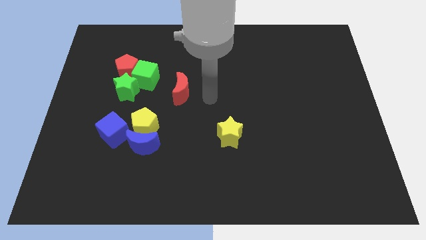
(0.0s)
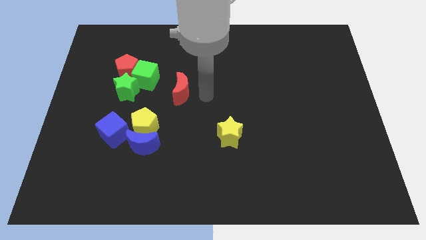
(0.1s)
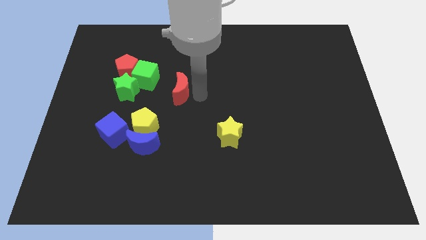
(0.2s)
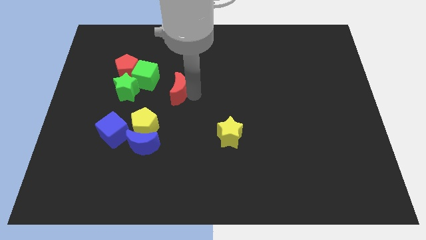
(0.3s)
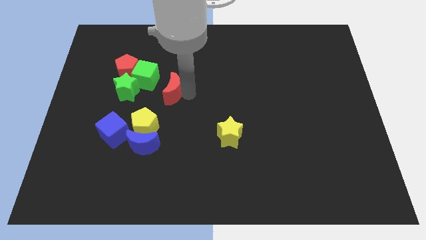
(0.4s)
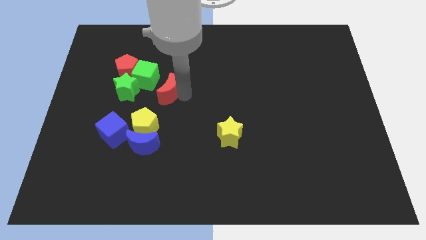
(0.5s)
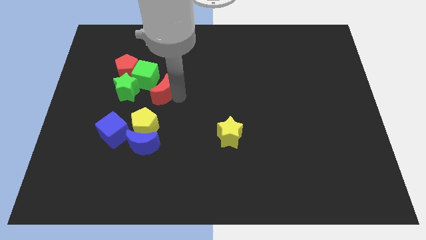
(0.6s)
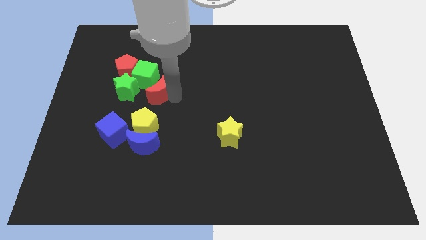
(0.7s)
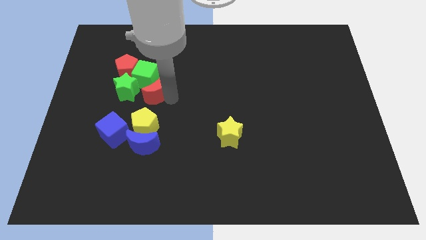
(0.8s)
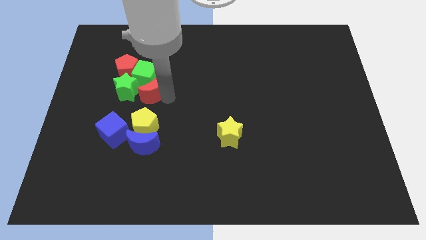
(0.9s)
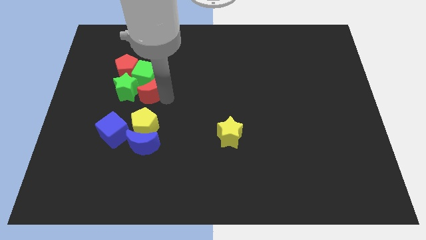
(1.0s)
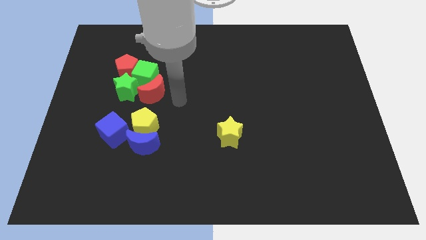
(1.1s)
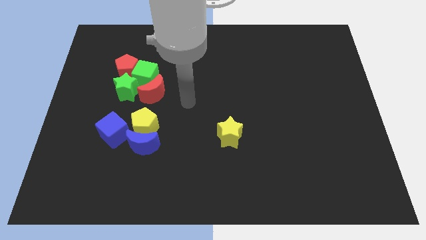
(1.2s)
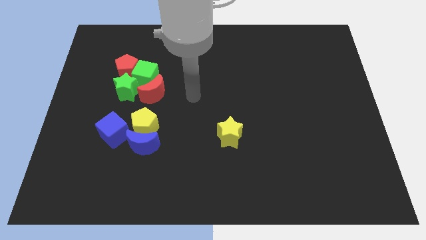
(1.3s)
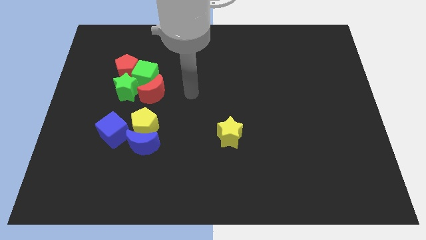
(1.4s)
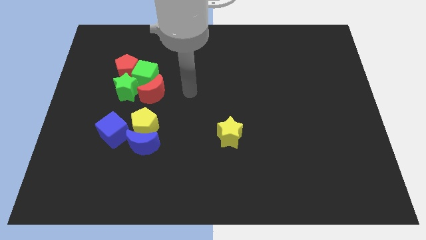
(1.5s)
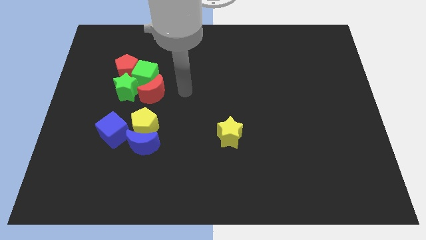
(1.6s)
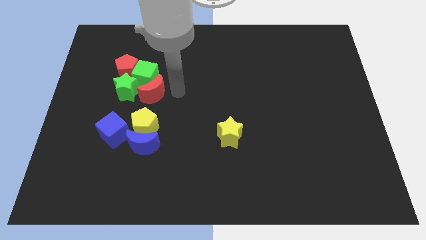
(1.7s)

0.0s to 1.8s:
place the red crescent below the green cube

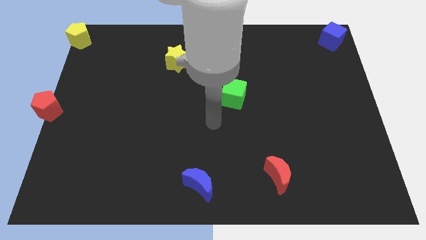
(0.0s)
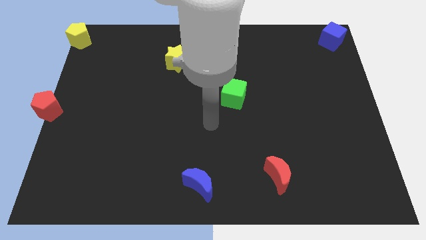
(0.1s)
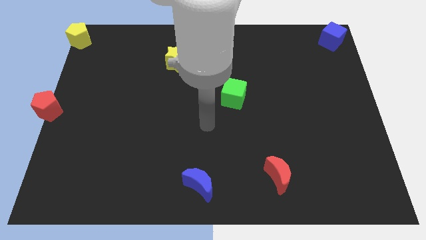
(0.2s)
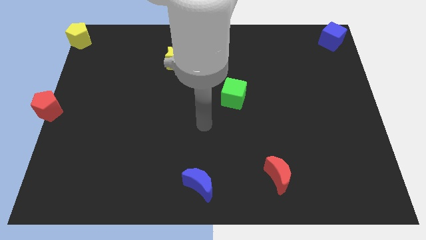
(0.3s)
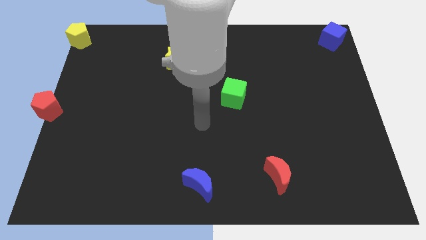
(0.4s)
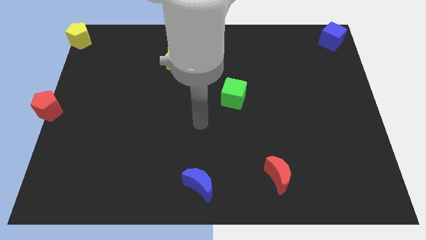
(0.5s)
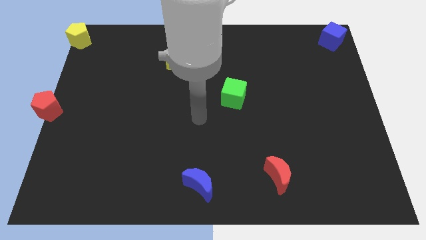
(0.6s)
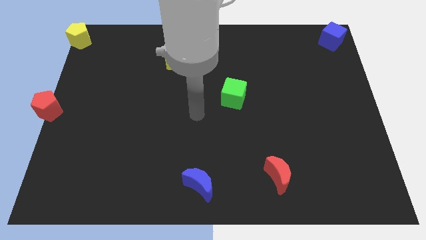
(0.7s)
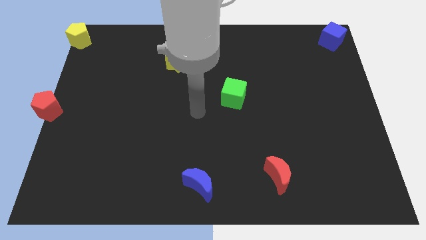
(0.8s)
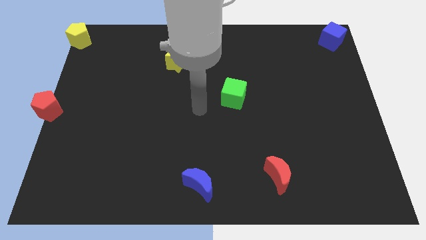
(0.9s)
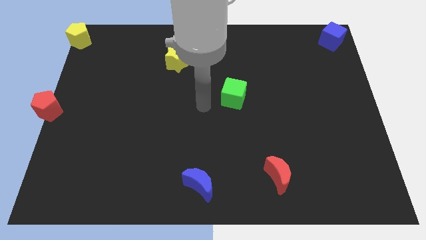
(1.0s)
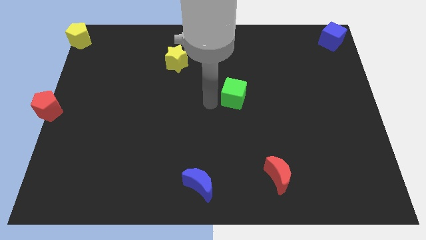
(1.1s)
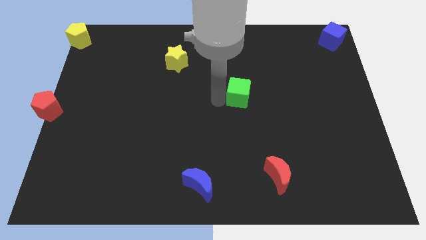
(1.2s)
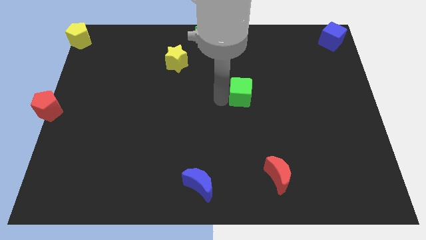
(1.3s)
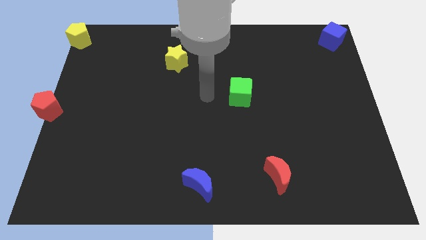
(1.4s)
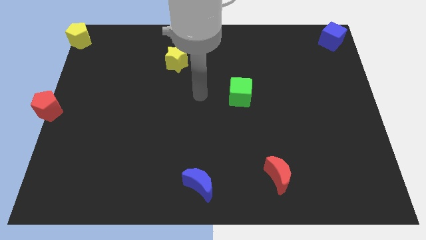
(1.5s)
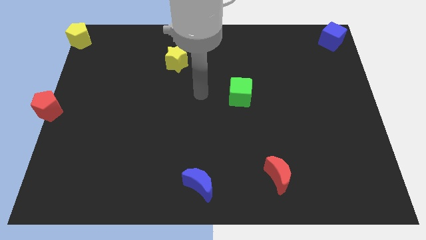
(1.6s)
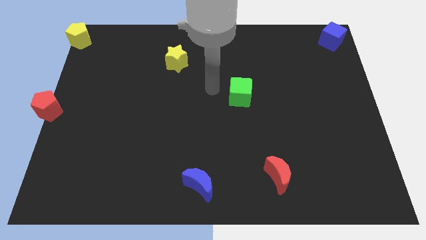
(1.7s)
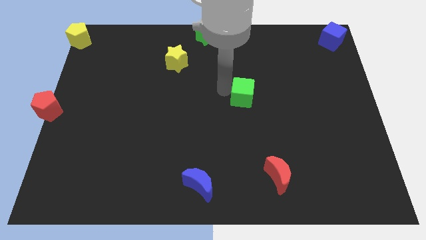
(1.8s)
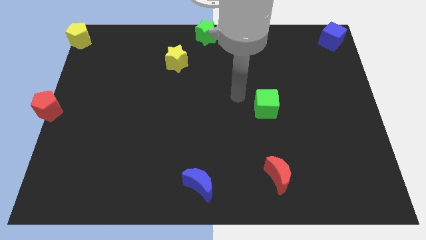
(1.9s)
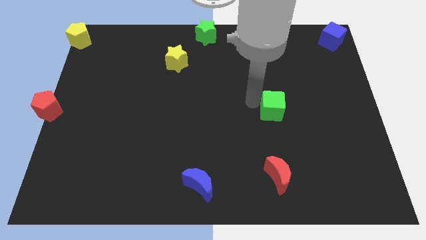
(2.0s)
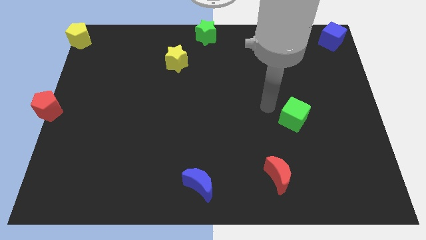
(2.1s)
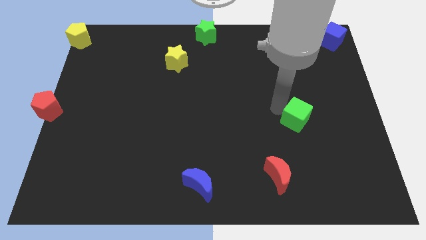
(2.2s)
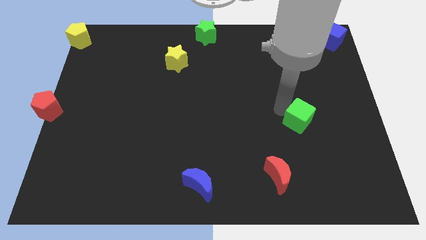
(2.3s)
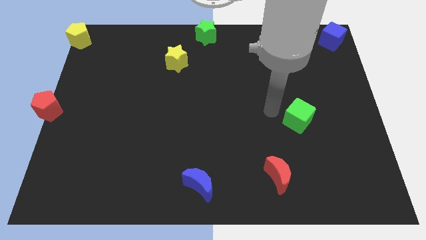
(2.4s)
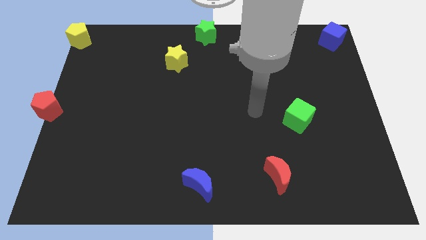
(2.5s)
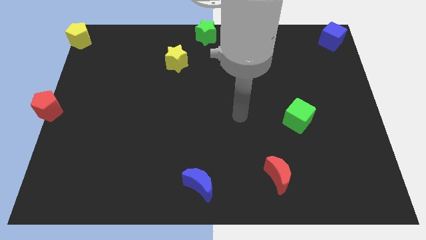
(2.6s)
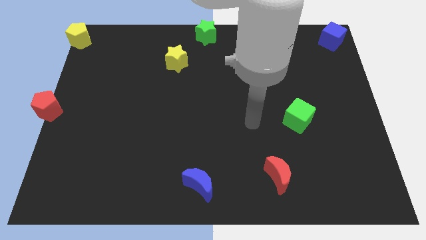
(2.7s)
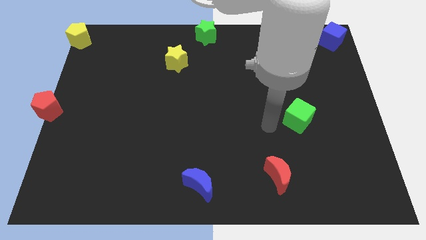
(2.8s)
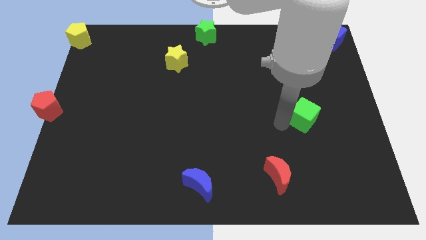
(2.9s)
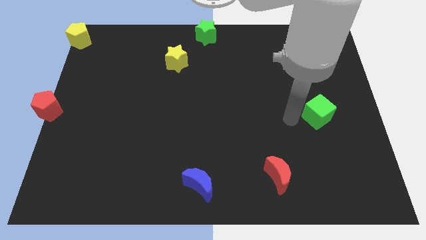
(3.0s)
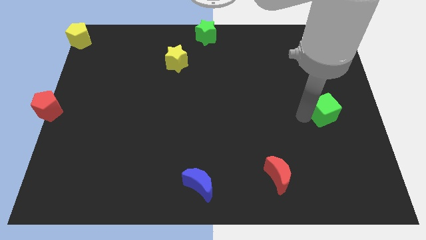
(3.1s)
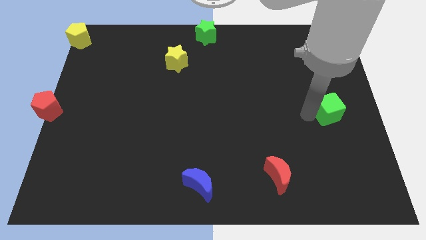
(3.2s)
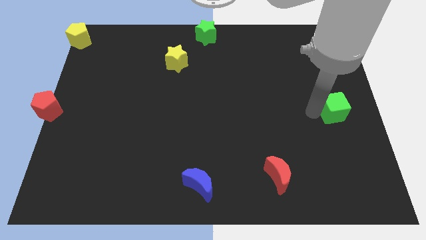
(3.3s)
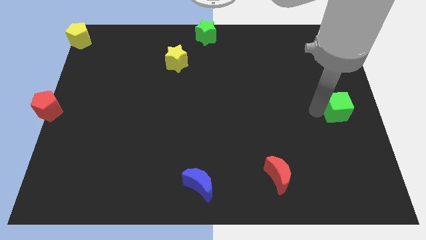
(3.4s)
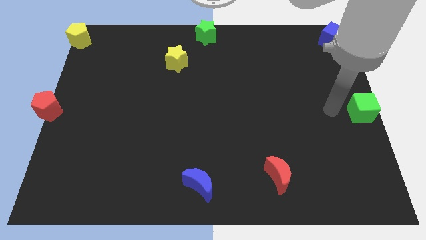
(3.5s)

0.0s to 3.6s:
move the green cube below the blue cube at the right

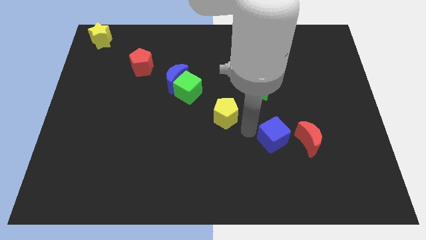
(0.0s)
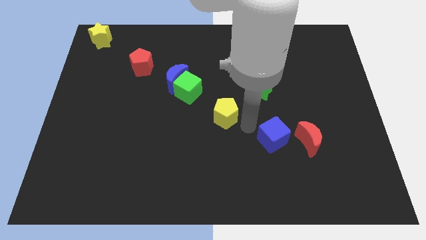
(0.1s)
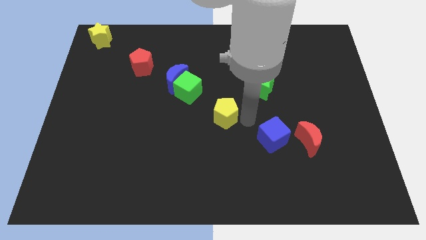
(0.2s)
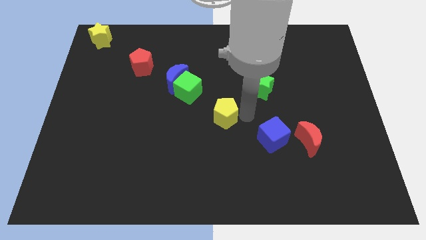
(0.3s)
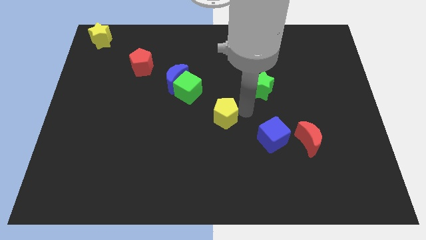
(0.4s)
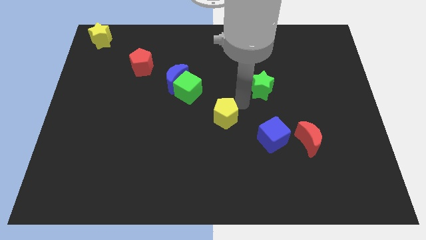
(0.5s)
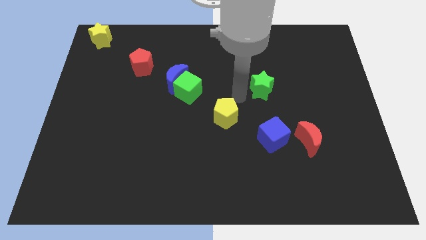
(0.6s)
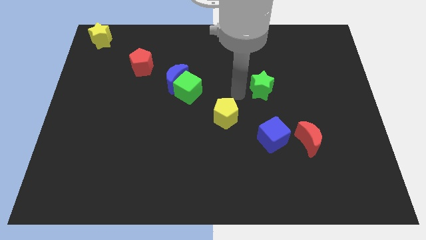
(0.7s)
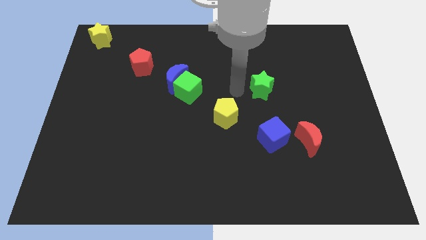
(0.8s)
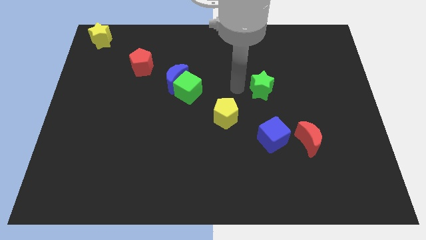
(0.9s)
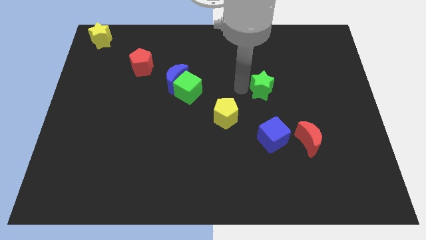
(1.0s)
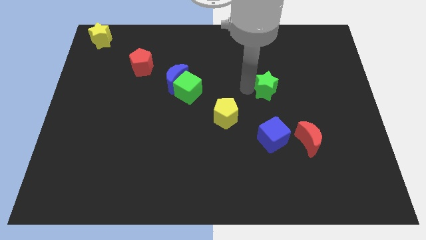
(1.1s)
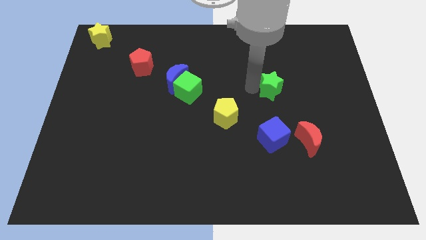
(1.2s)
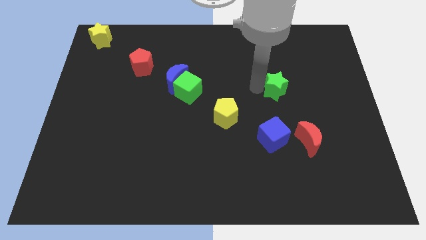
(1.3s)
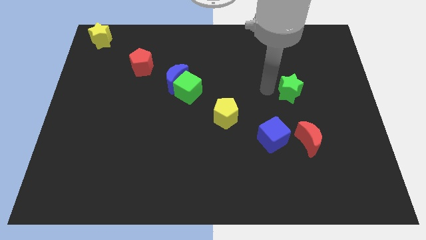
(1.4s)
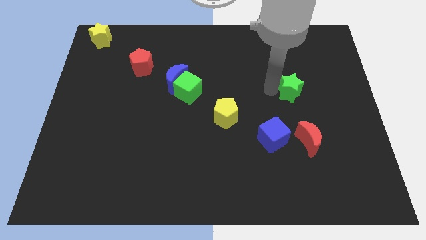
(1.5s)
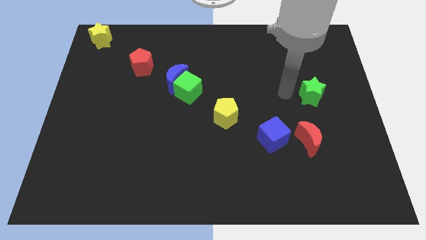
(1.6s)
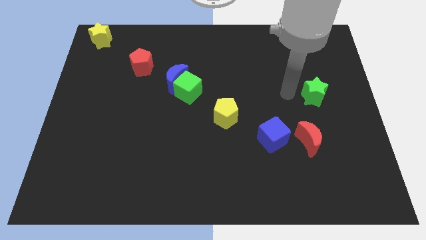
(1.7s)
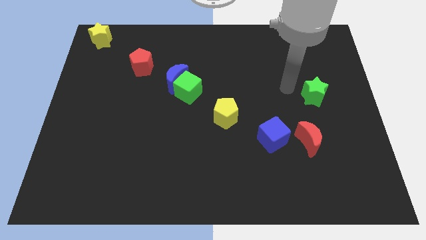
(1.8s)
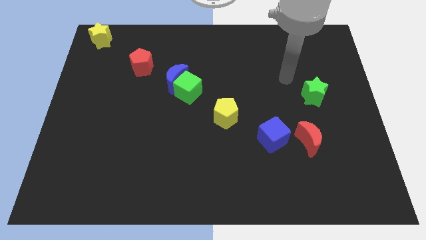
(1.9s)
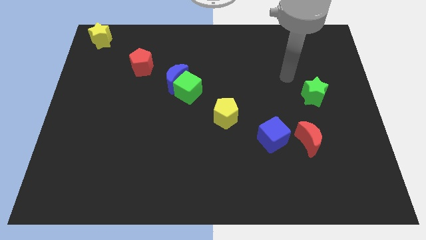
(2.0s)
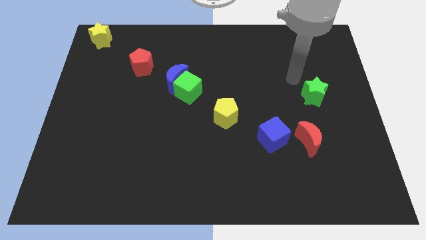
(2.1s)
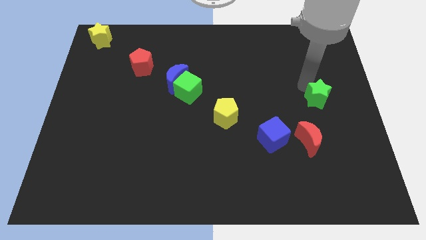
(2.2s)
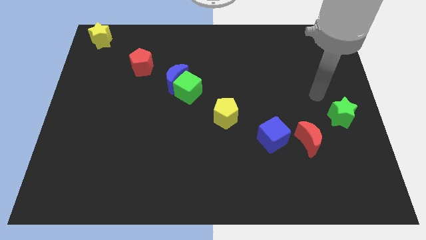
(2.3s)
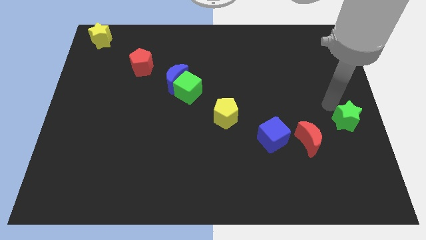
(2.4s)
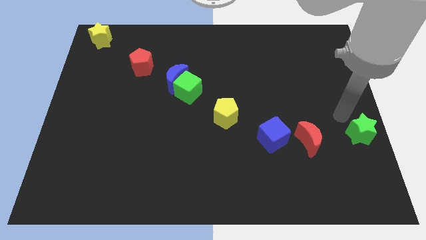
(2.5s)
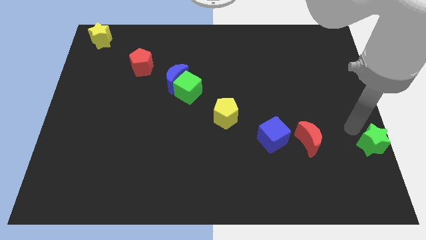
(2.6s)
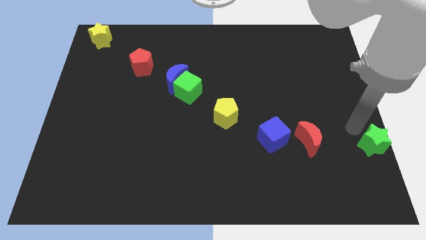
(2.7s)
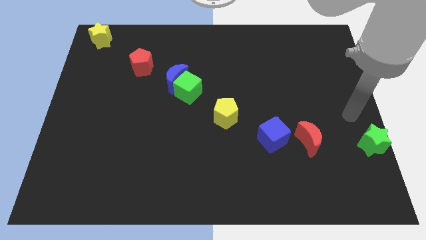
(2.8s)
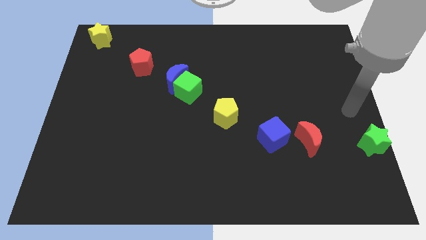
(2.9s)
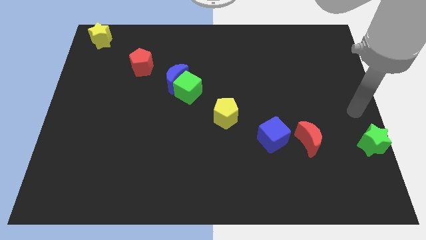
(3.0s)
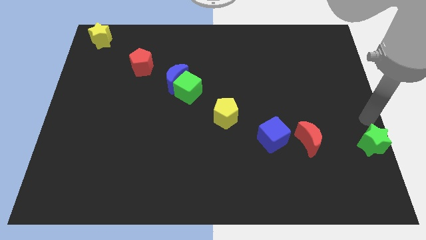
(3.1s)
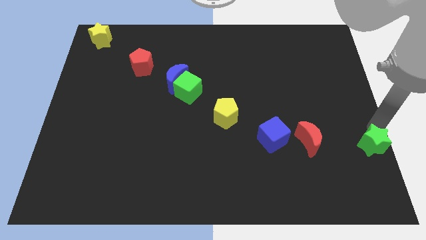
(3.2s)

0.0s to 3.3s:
put the green star parallel right to the red moon
